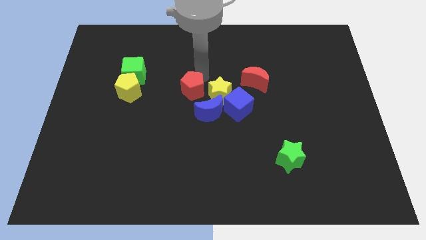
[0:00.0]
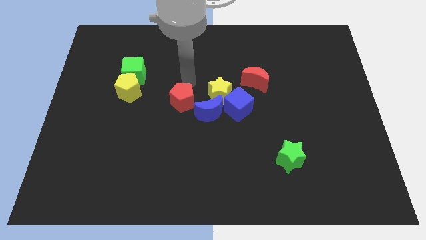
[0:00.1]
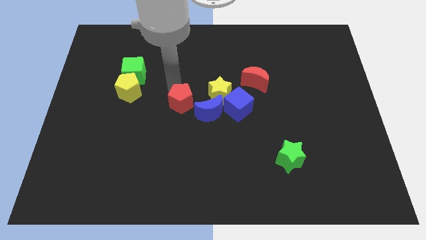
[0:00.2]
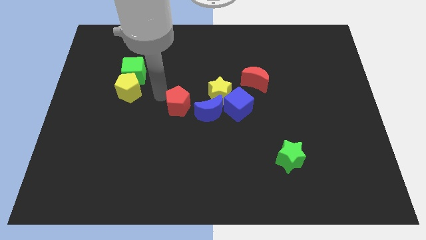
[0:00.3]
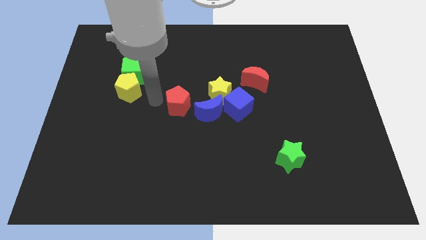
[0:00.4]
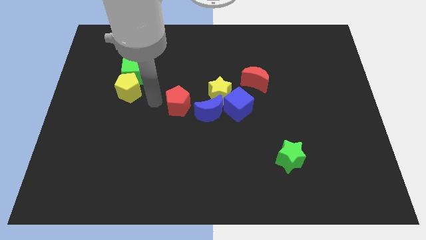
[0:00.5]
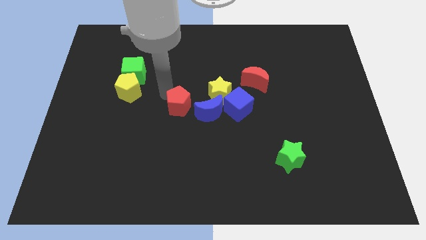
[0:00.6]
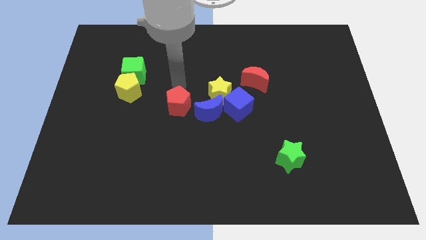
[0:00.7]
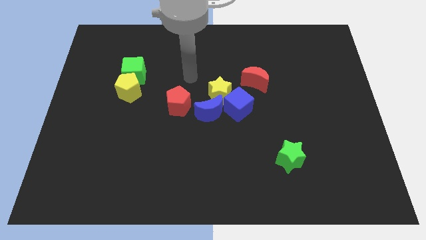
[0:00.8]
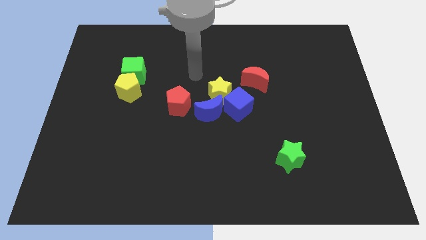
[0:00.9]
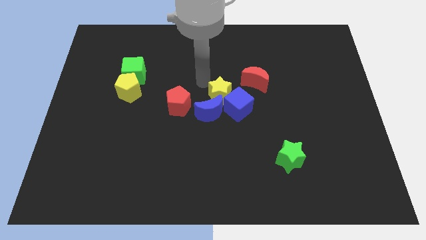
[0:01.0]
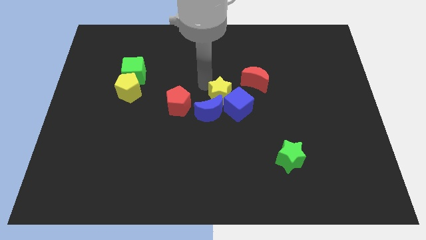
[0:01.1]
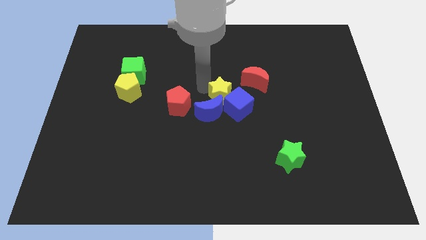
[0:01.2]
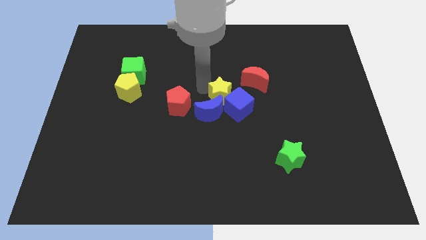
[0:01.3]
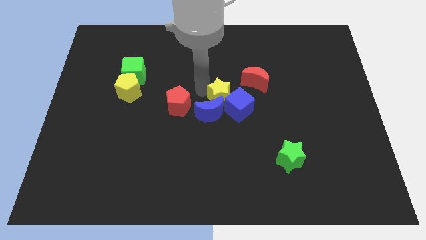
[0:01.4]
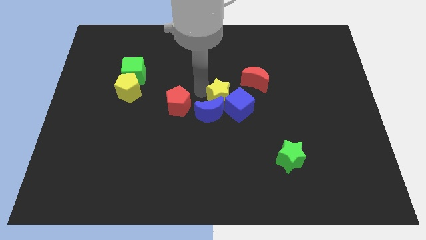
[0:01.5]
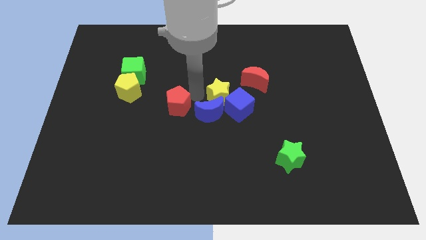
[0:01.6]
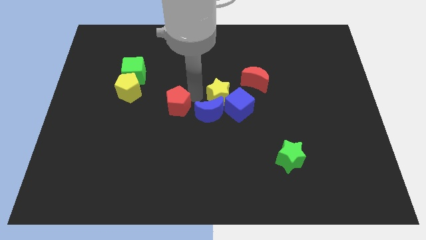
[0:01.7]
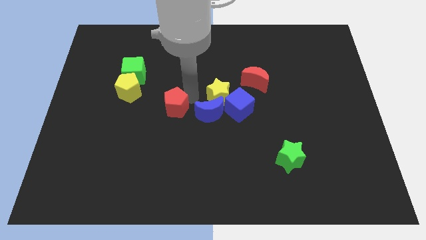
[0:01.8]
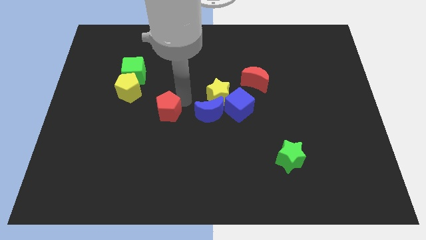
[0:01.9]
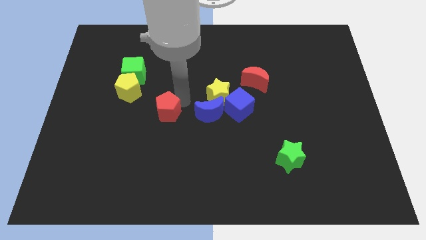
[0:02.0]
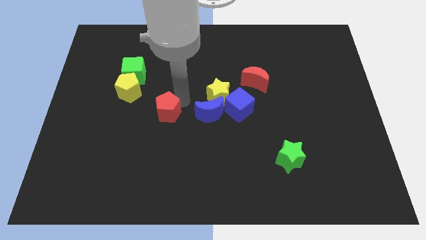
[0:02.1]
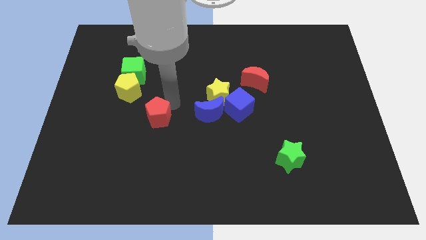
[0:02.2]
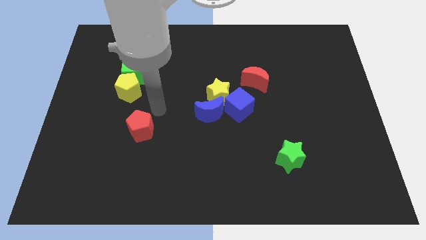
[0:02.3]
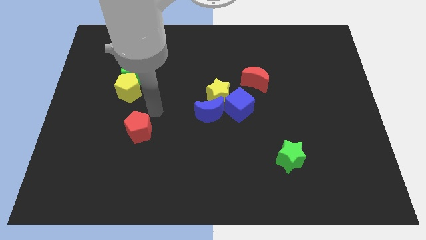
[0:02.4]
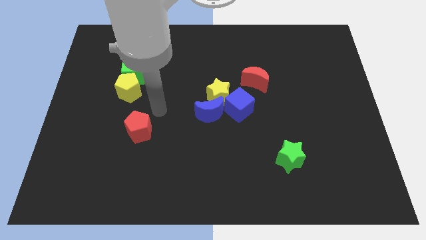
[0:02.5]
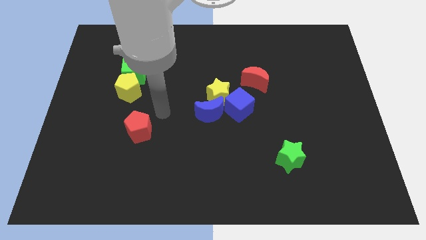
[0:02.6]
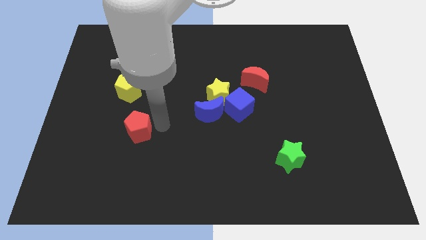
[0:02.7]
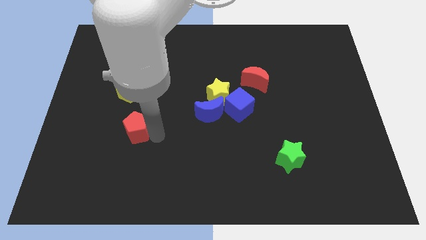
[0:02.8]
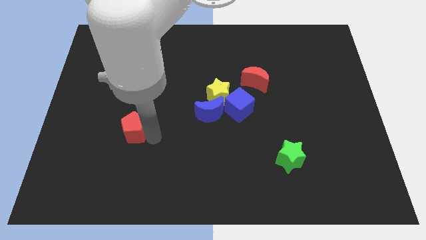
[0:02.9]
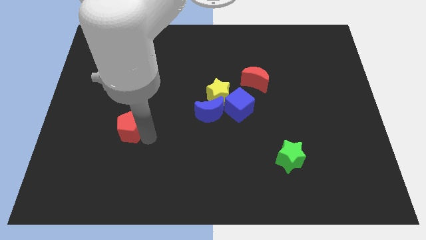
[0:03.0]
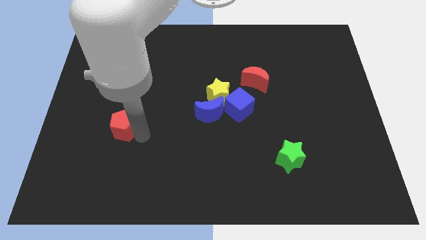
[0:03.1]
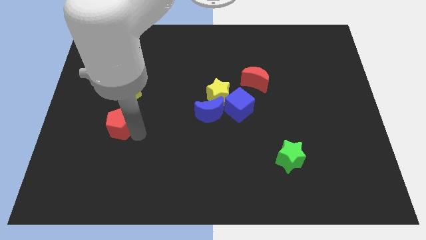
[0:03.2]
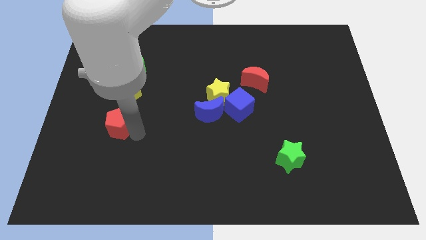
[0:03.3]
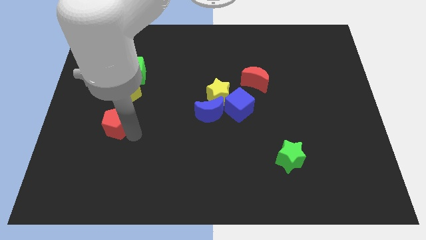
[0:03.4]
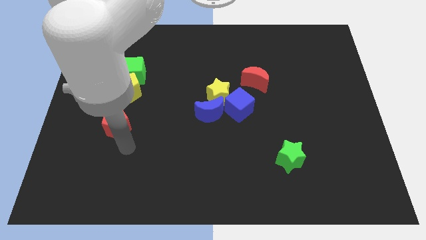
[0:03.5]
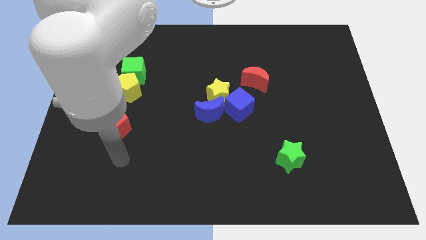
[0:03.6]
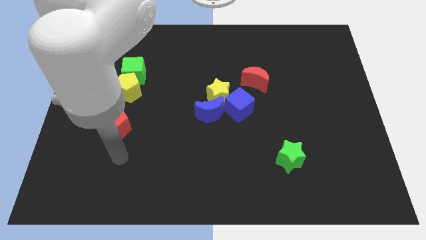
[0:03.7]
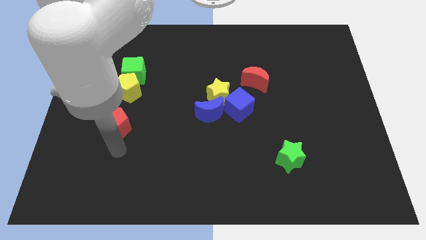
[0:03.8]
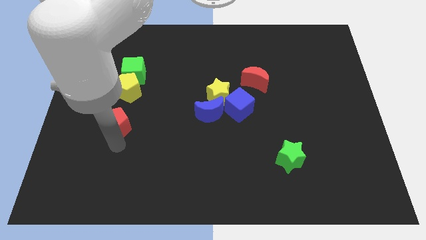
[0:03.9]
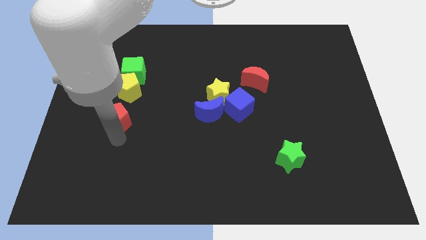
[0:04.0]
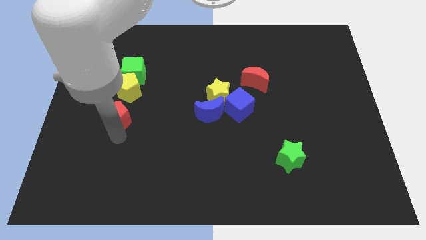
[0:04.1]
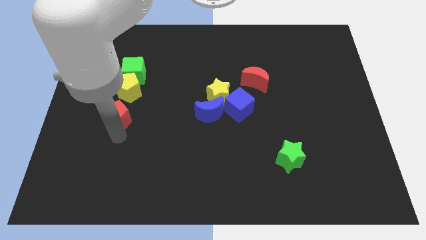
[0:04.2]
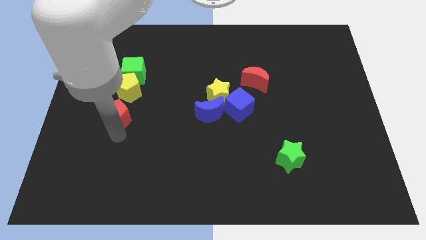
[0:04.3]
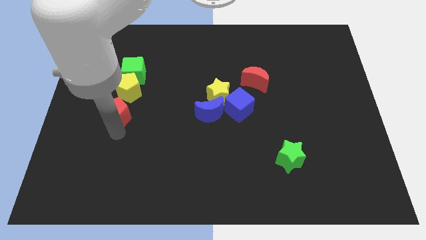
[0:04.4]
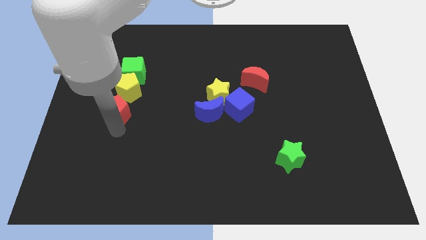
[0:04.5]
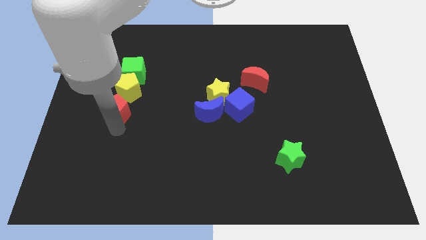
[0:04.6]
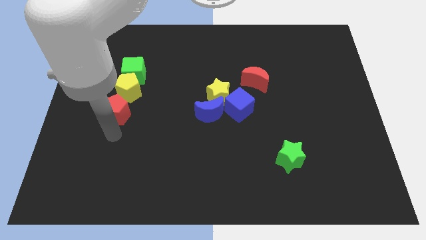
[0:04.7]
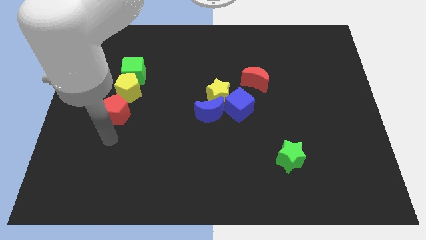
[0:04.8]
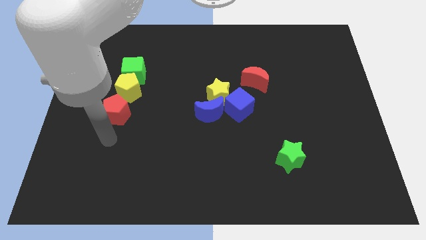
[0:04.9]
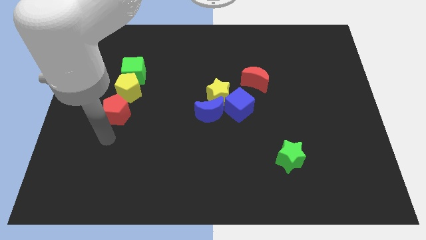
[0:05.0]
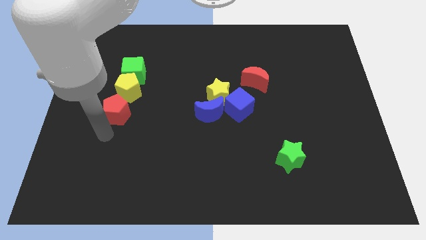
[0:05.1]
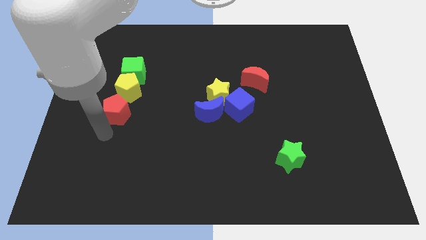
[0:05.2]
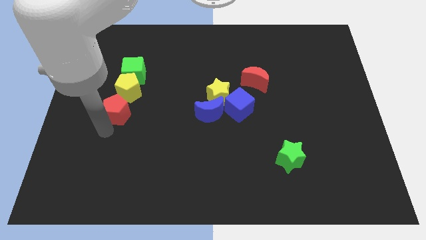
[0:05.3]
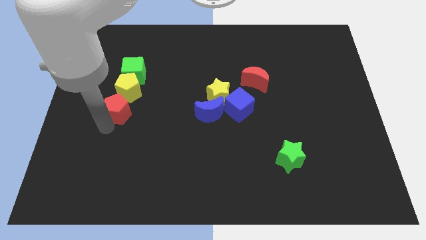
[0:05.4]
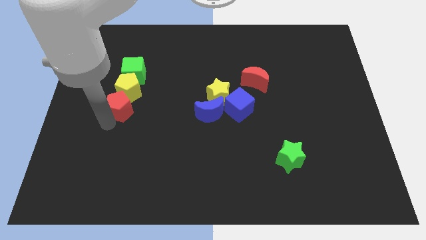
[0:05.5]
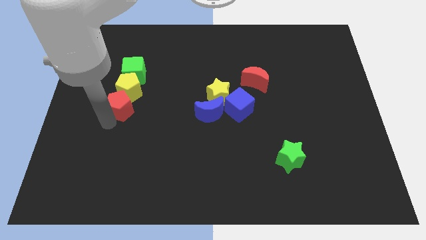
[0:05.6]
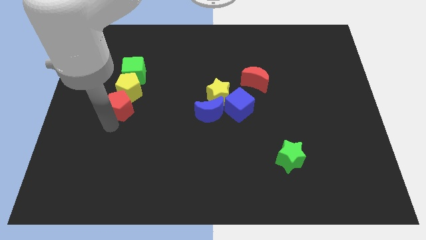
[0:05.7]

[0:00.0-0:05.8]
make a vertical line with the red pentagon yellow pentagon and green cube

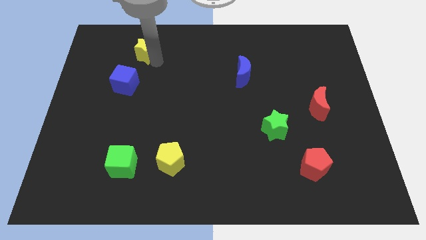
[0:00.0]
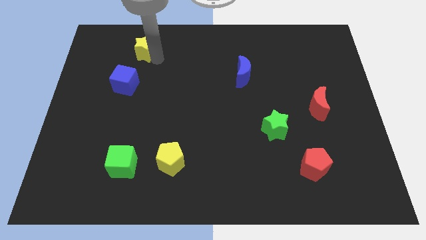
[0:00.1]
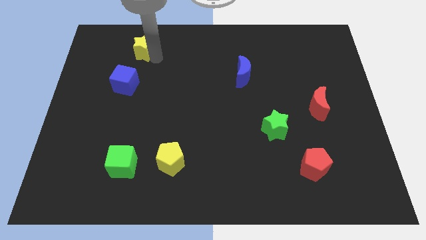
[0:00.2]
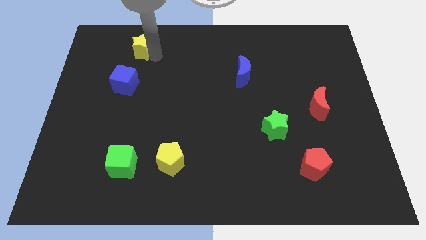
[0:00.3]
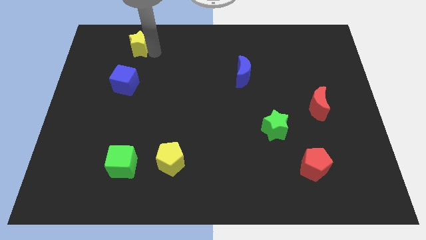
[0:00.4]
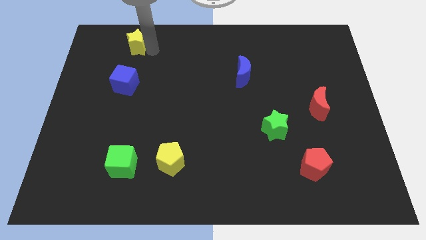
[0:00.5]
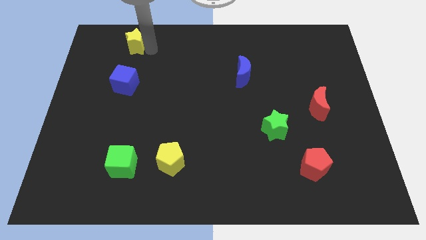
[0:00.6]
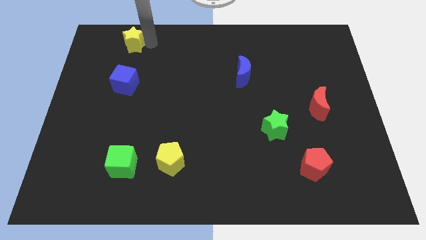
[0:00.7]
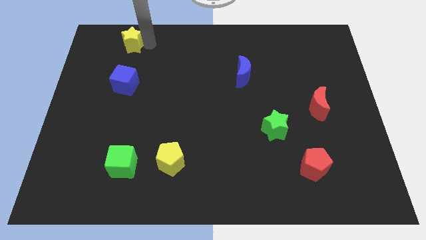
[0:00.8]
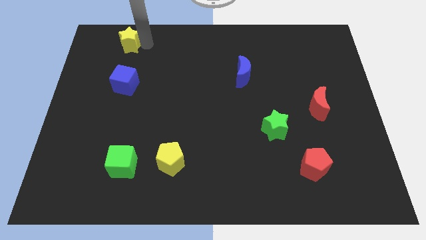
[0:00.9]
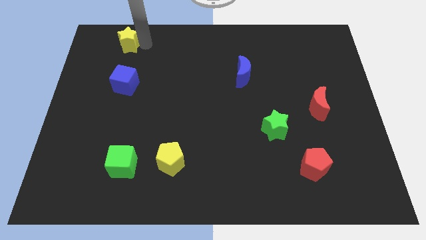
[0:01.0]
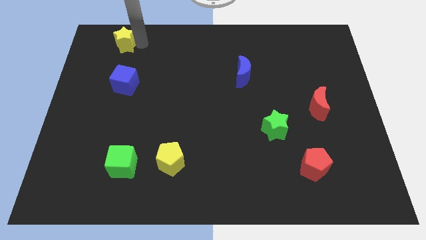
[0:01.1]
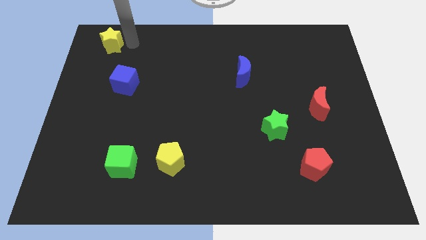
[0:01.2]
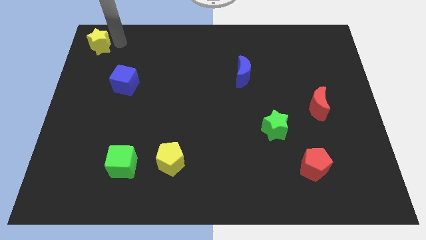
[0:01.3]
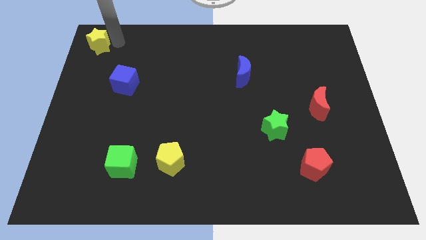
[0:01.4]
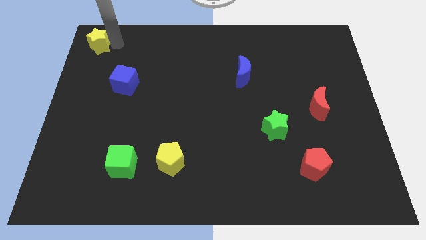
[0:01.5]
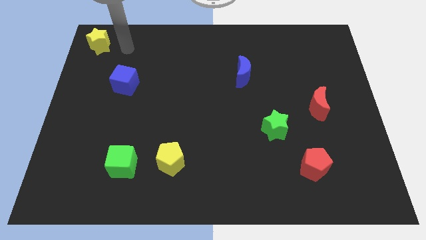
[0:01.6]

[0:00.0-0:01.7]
move the yellow star to the top left corner

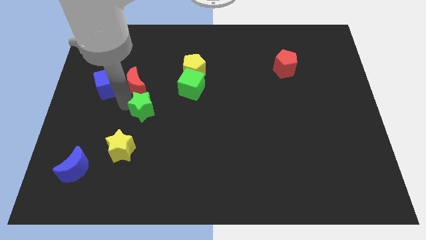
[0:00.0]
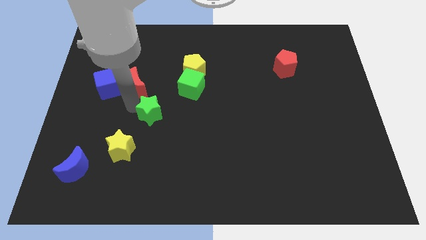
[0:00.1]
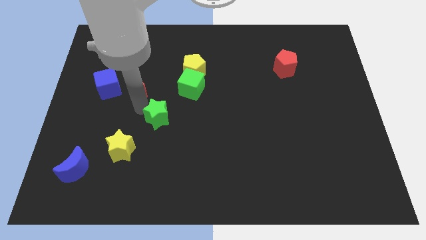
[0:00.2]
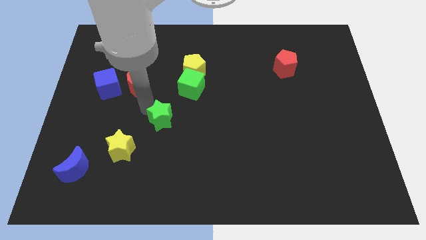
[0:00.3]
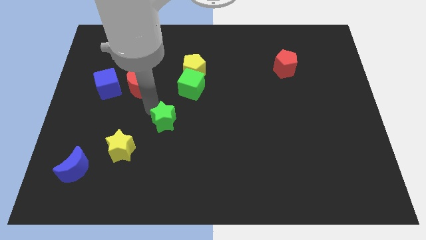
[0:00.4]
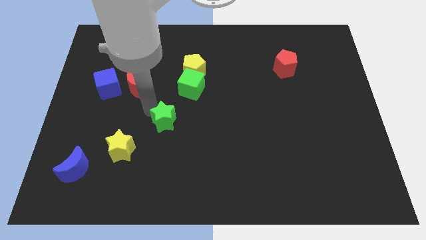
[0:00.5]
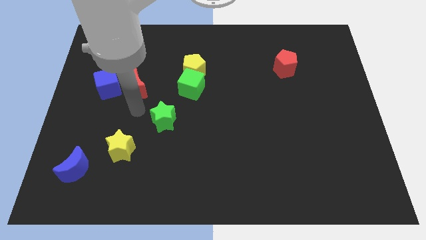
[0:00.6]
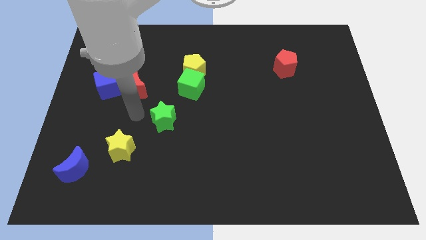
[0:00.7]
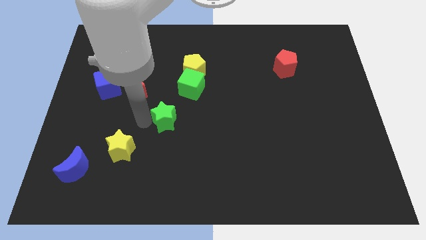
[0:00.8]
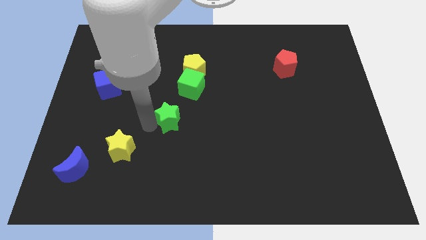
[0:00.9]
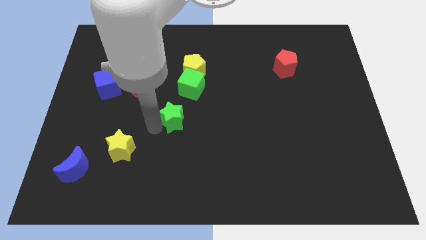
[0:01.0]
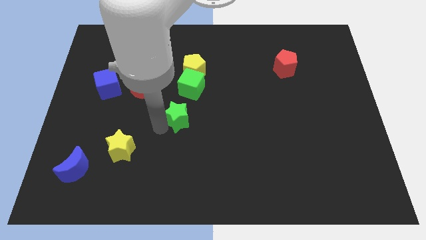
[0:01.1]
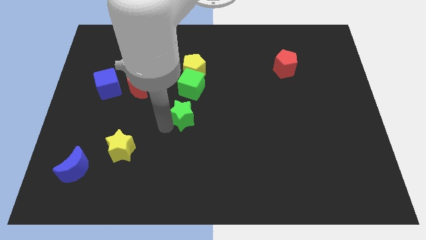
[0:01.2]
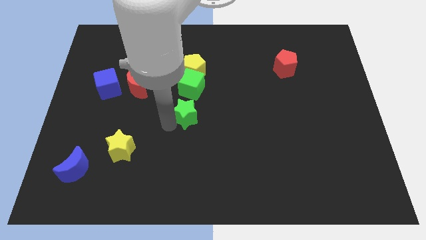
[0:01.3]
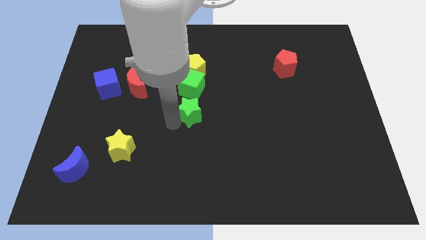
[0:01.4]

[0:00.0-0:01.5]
place green star to the bottom of the green cube
